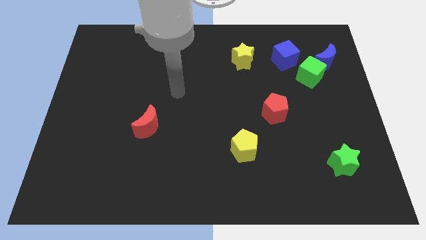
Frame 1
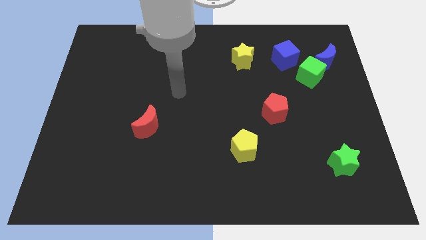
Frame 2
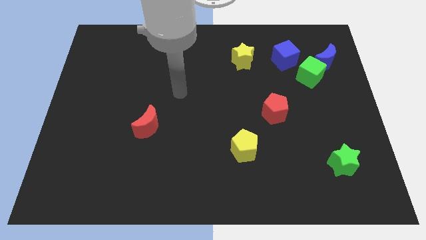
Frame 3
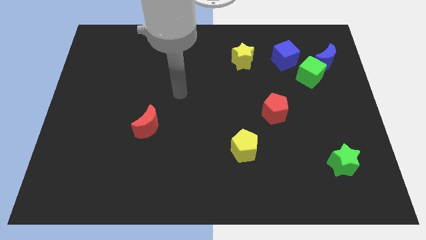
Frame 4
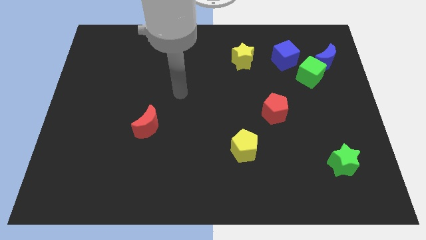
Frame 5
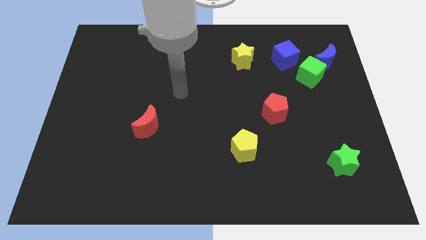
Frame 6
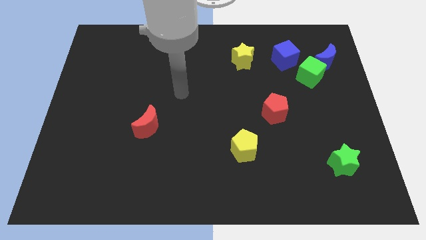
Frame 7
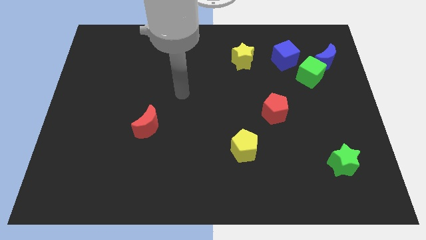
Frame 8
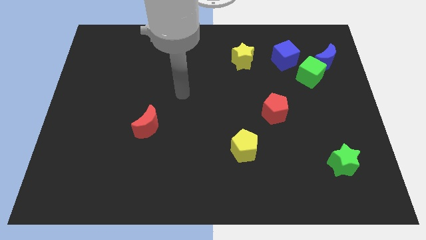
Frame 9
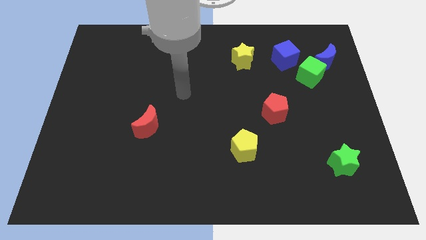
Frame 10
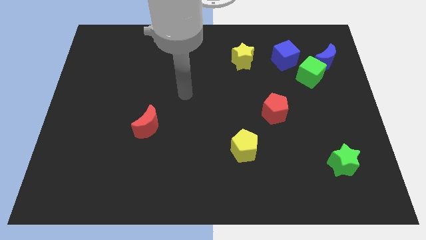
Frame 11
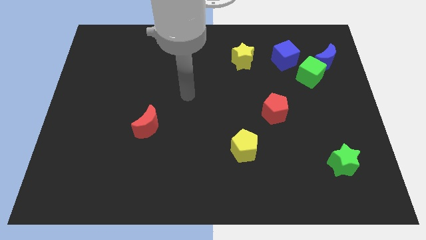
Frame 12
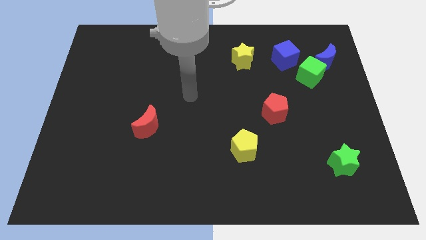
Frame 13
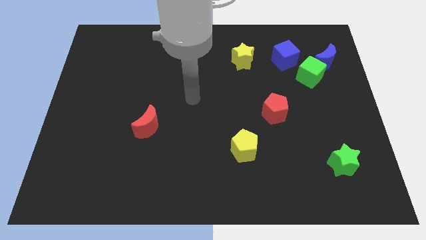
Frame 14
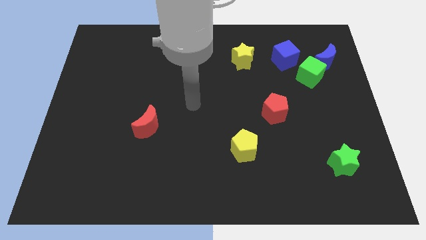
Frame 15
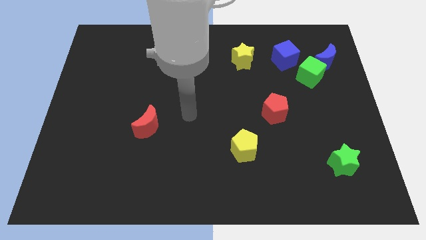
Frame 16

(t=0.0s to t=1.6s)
point your hand at the right side of the red moon

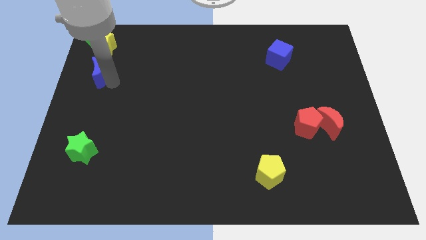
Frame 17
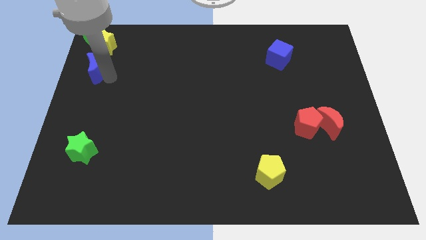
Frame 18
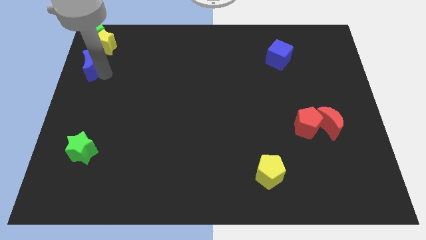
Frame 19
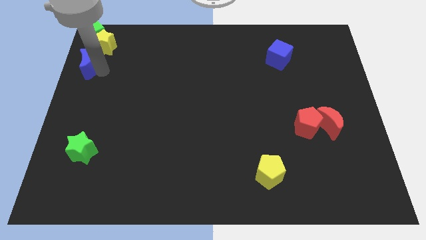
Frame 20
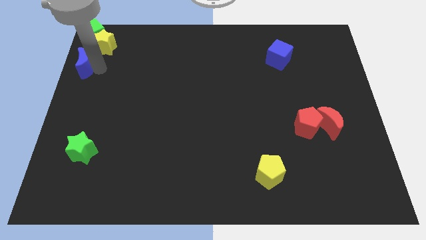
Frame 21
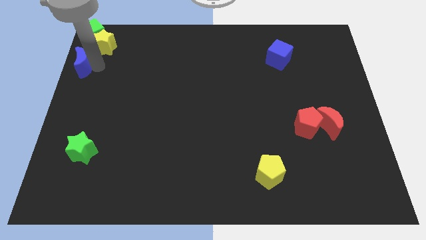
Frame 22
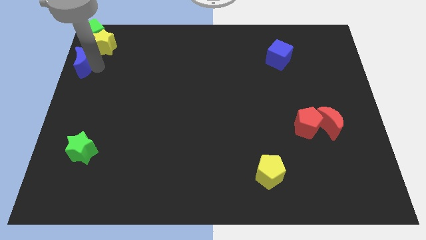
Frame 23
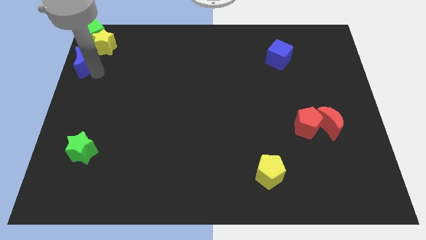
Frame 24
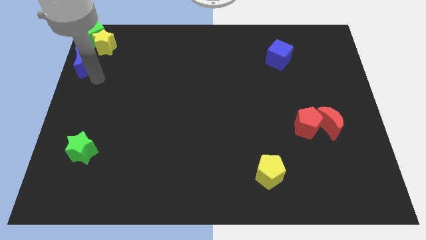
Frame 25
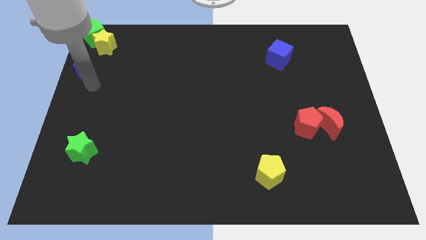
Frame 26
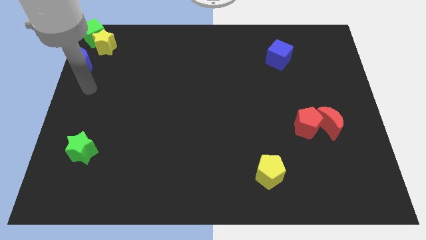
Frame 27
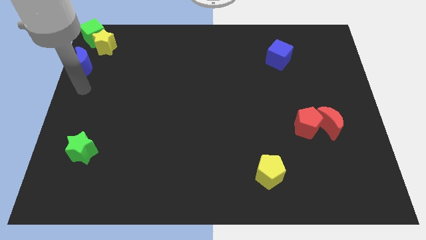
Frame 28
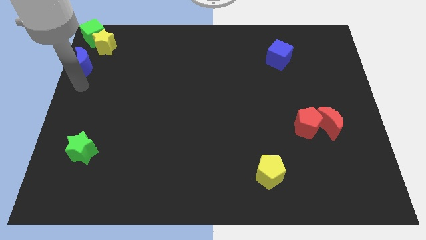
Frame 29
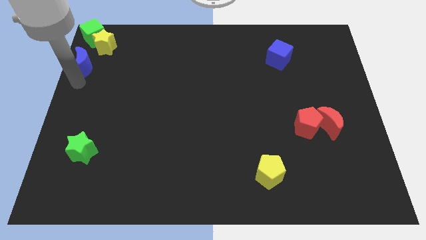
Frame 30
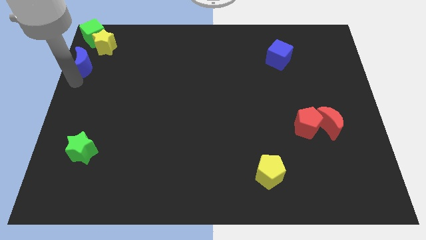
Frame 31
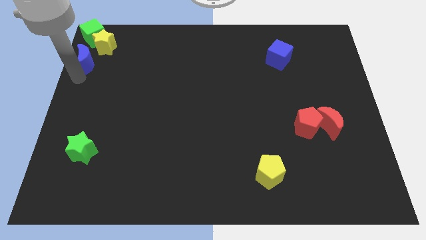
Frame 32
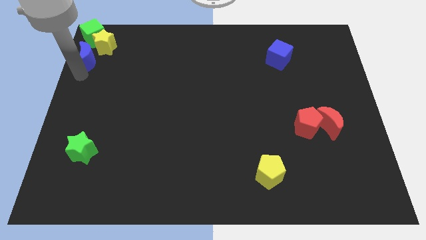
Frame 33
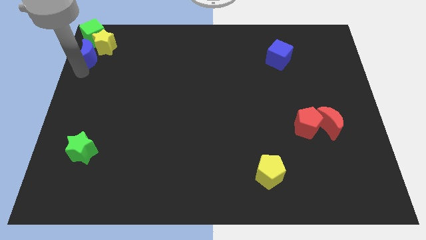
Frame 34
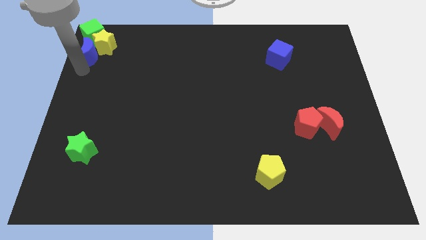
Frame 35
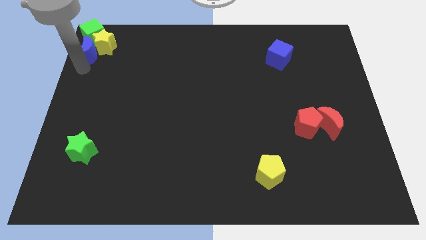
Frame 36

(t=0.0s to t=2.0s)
place the blue crescent towards the left side of the yellow star

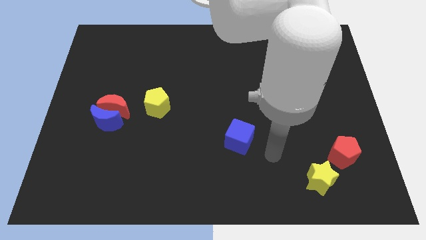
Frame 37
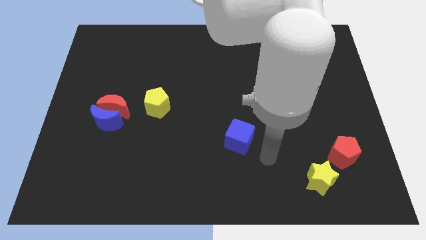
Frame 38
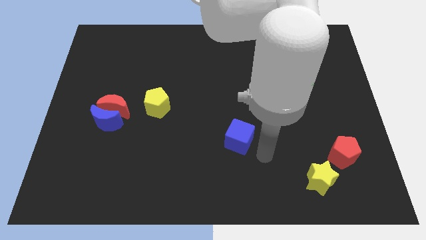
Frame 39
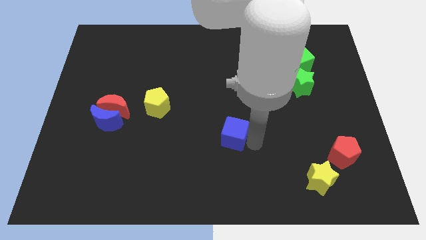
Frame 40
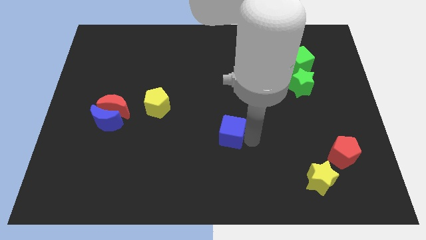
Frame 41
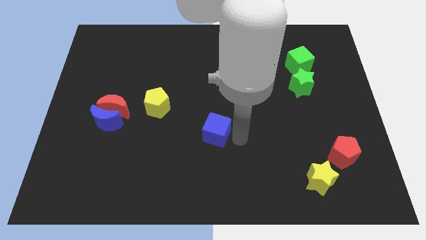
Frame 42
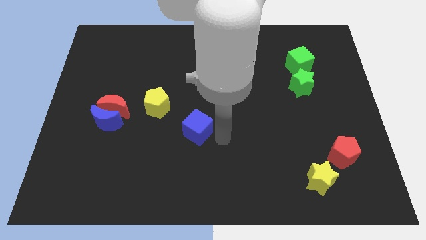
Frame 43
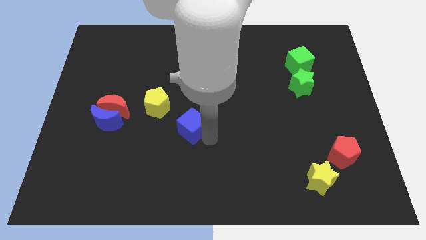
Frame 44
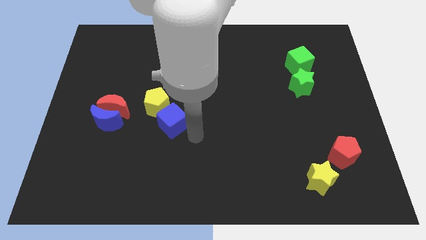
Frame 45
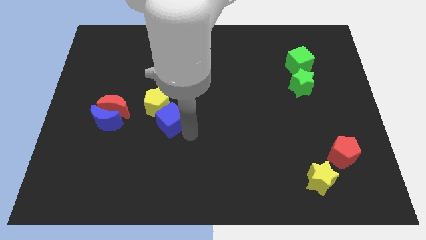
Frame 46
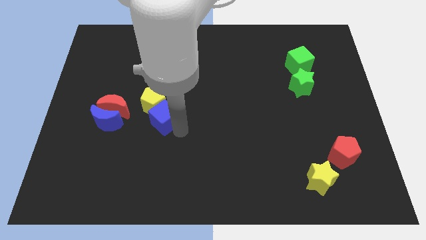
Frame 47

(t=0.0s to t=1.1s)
move the blue cube into yellow pentagon

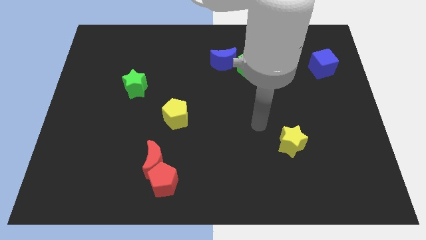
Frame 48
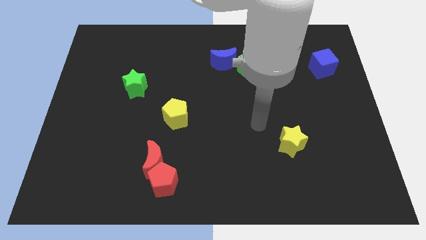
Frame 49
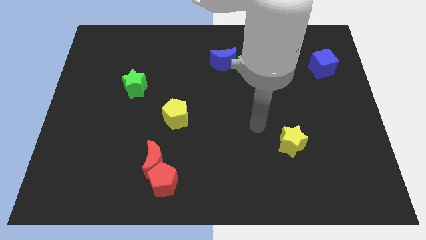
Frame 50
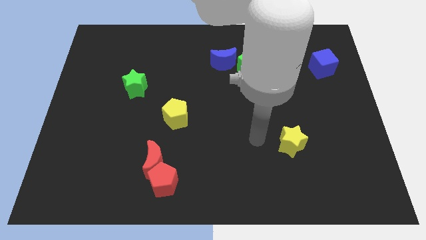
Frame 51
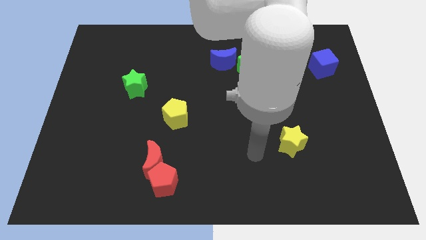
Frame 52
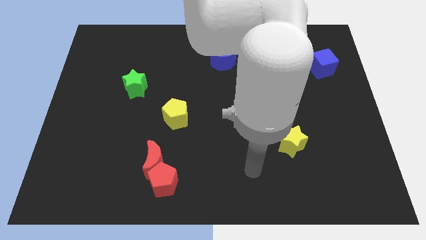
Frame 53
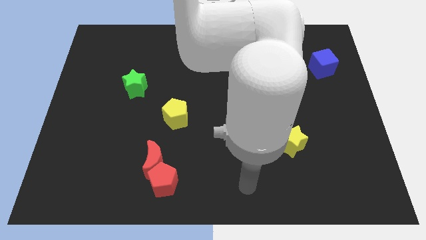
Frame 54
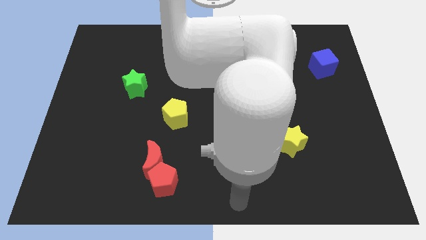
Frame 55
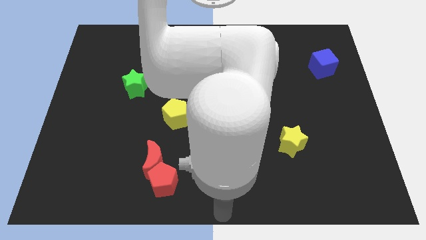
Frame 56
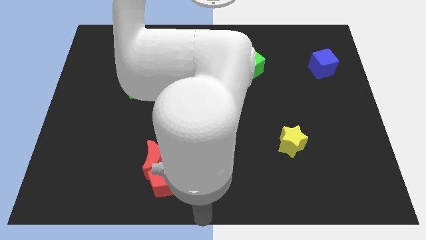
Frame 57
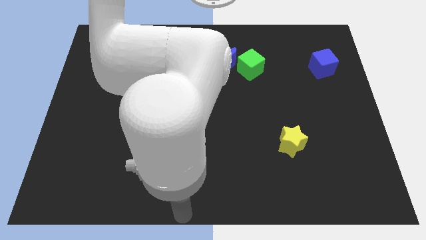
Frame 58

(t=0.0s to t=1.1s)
move your arm to the bottom center

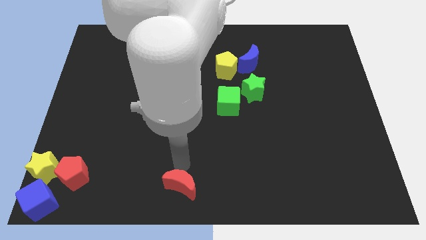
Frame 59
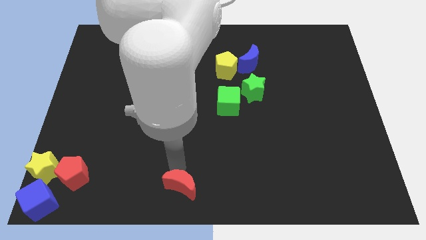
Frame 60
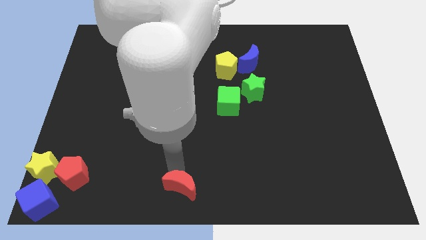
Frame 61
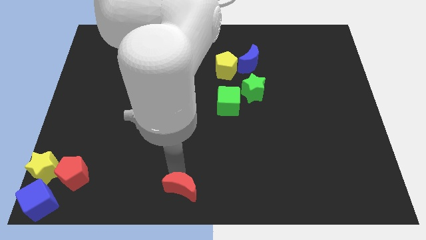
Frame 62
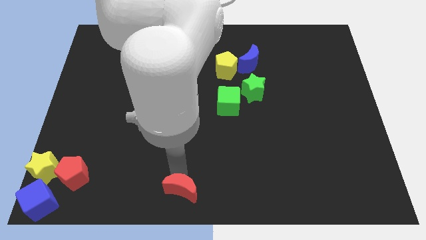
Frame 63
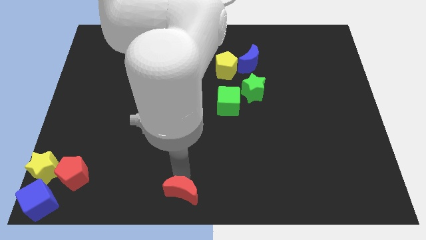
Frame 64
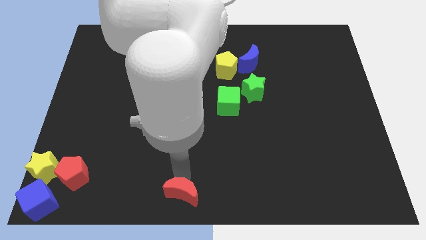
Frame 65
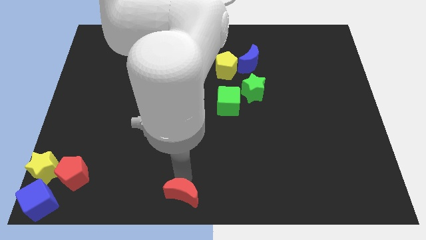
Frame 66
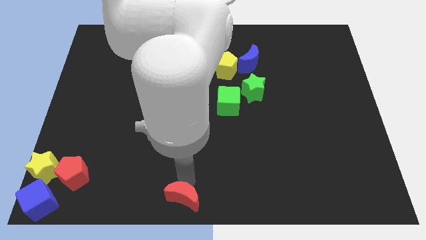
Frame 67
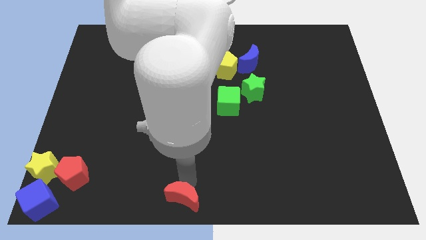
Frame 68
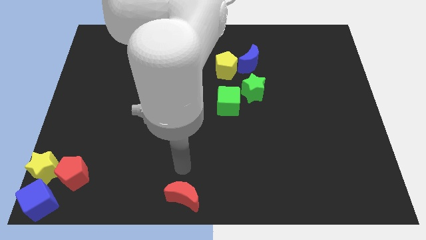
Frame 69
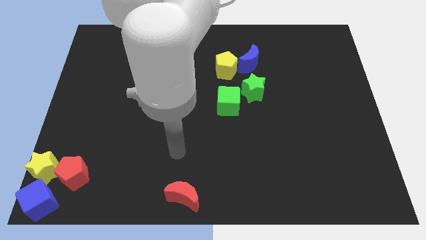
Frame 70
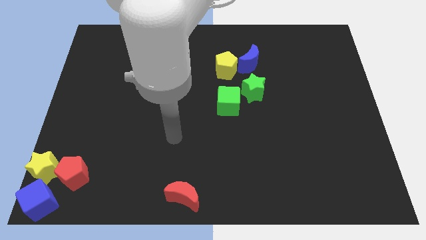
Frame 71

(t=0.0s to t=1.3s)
move red crescent to bottom center

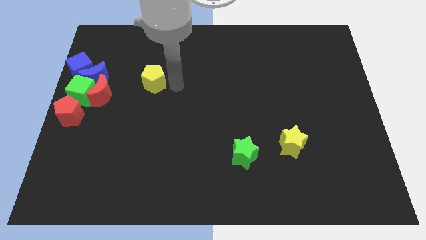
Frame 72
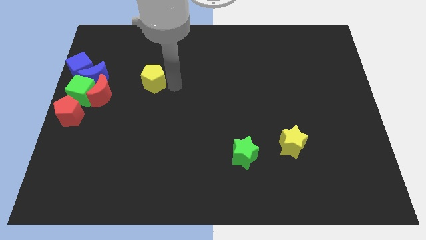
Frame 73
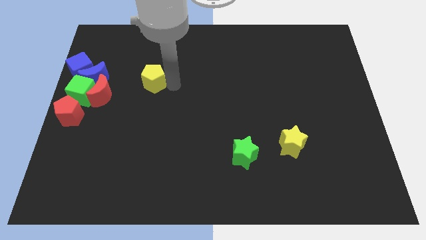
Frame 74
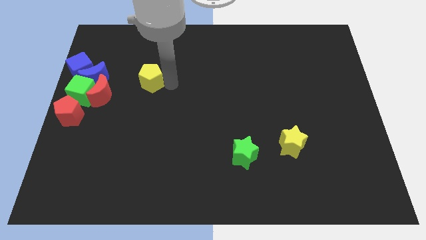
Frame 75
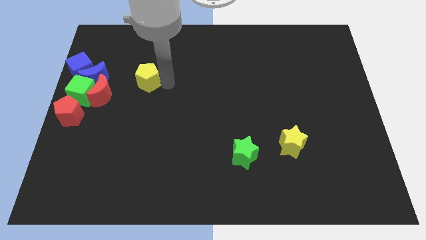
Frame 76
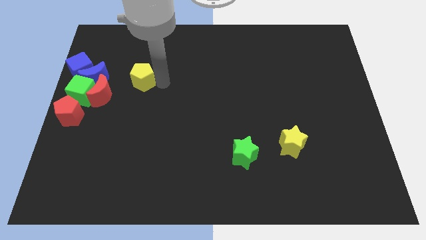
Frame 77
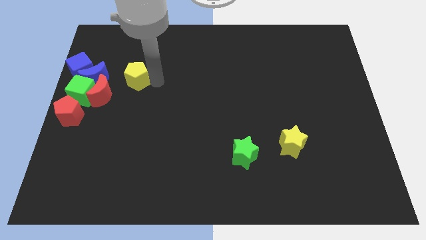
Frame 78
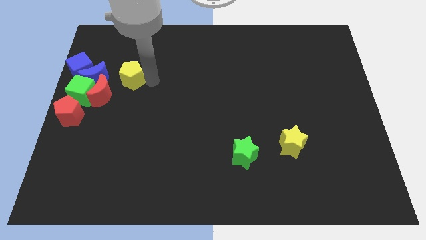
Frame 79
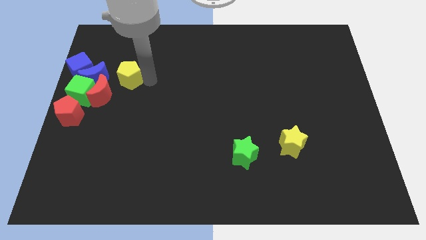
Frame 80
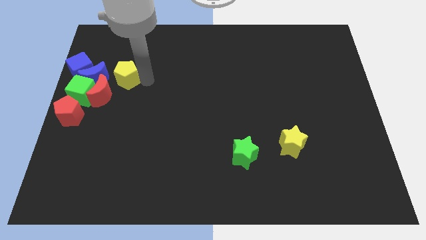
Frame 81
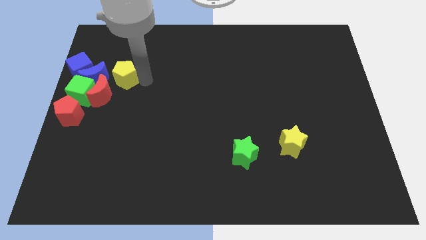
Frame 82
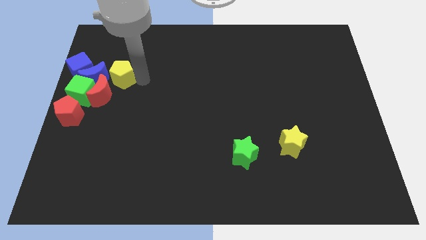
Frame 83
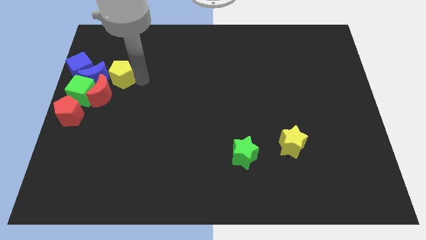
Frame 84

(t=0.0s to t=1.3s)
move the yellow pentagon close to the blue moon

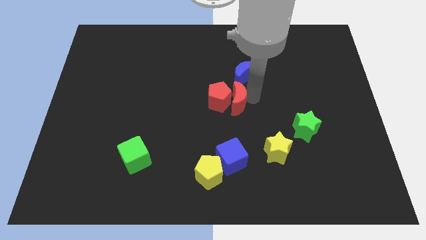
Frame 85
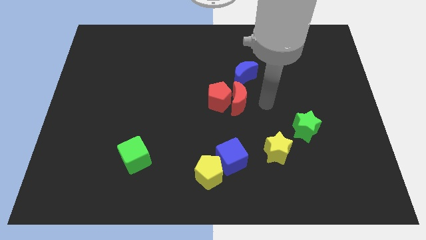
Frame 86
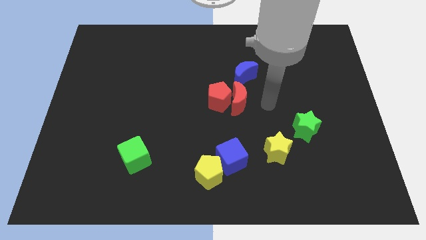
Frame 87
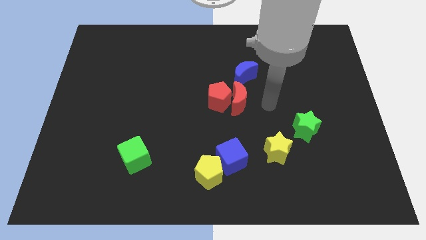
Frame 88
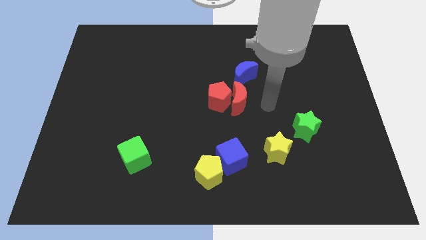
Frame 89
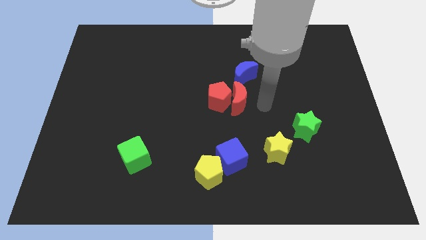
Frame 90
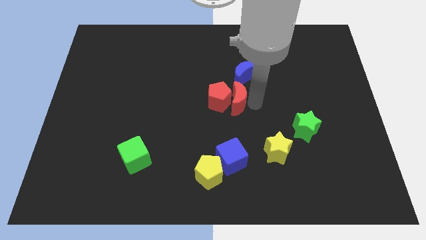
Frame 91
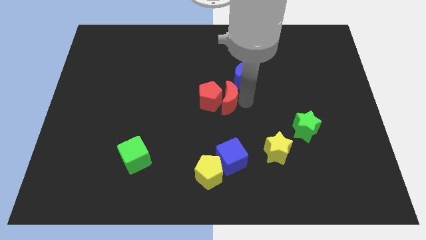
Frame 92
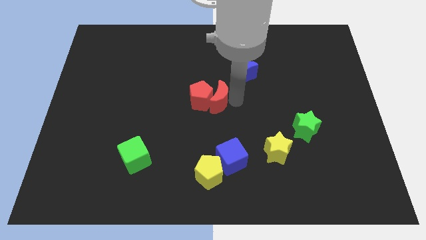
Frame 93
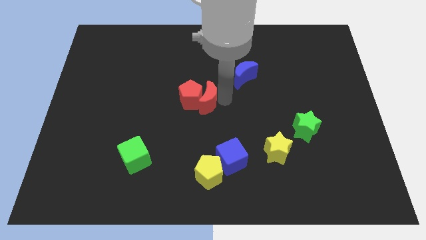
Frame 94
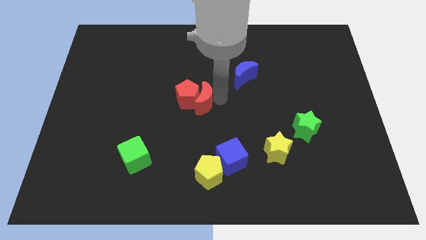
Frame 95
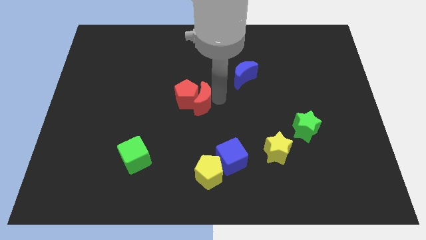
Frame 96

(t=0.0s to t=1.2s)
push the red crescent along with red pentagon to the left
